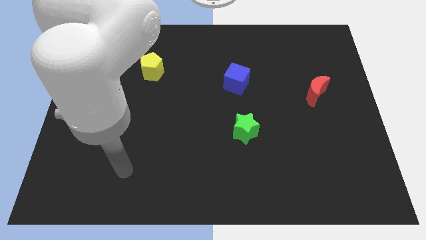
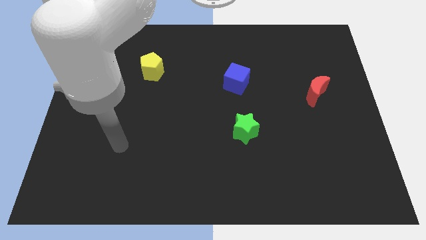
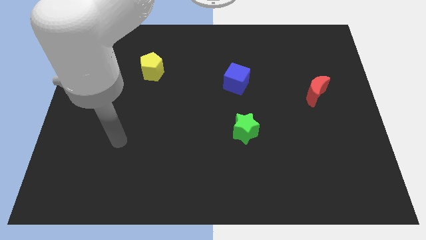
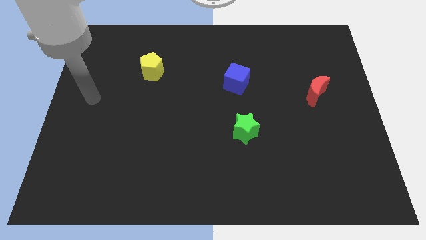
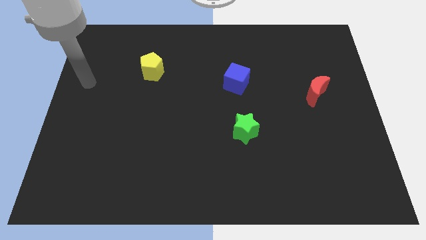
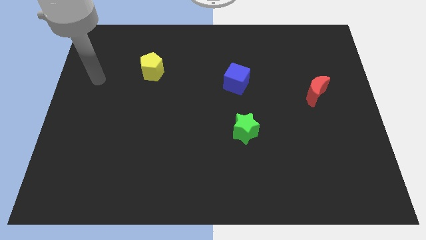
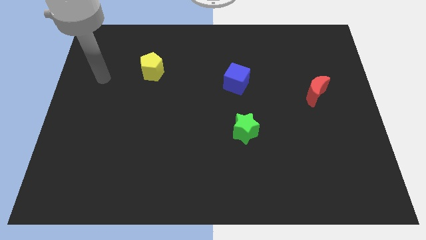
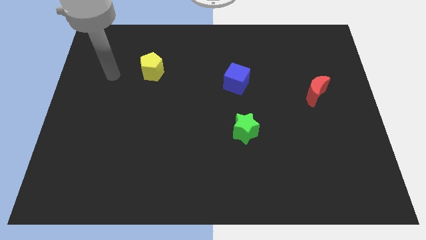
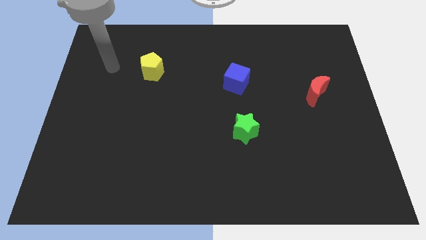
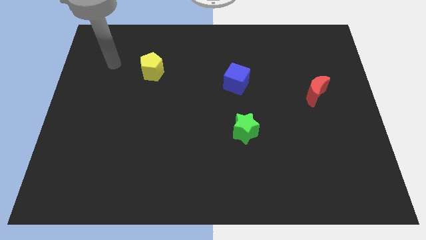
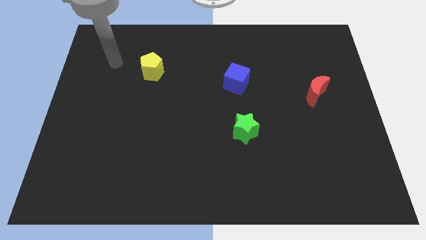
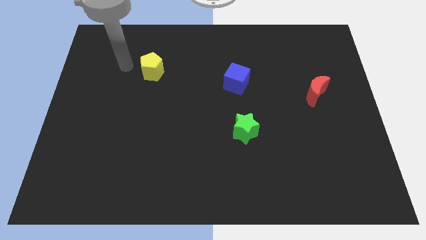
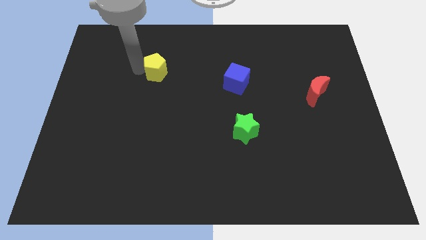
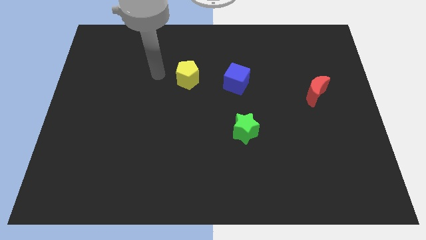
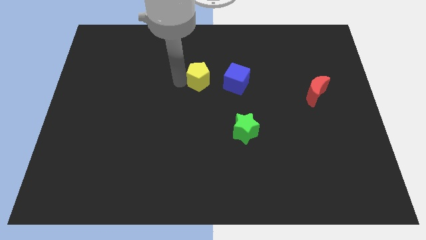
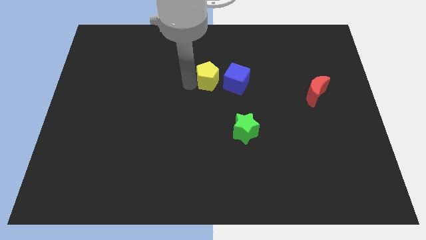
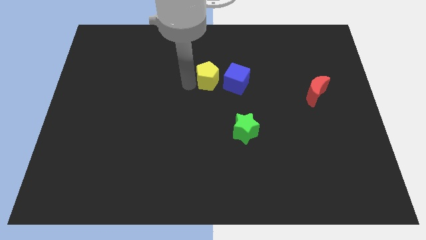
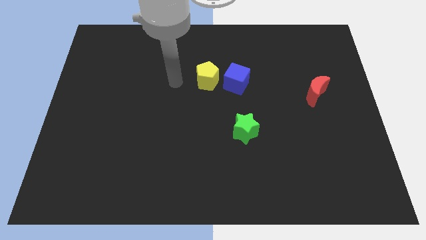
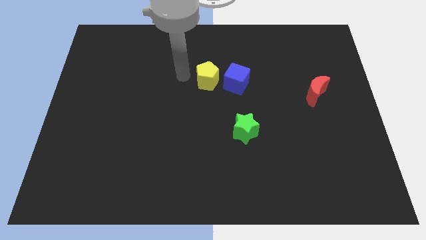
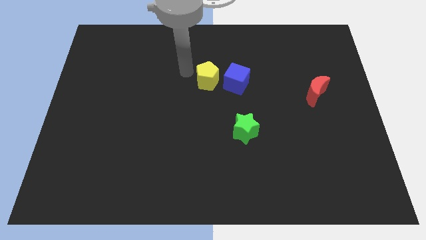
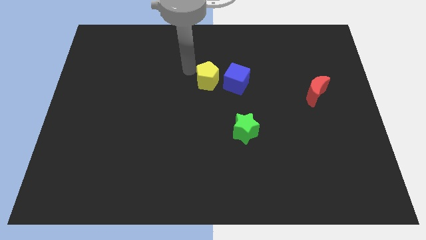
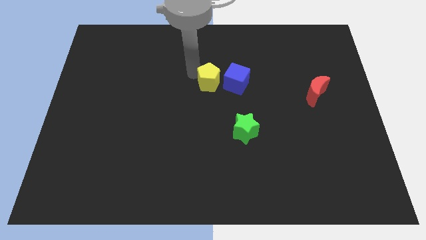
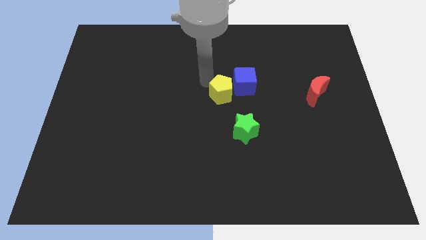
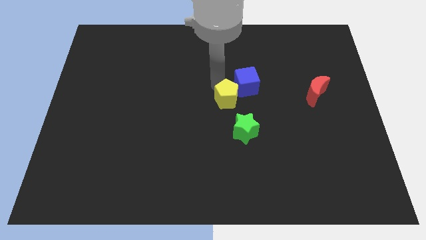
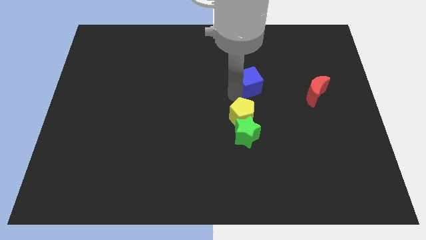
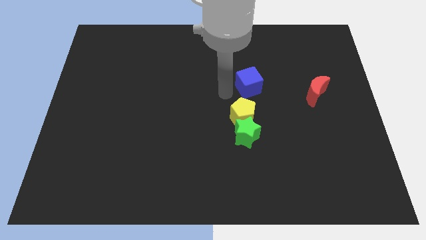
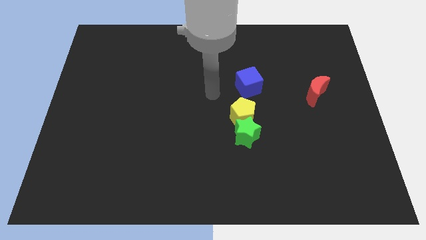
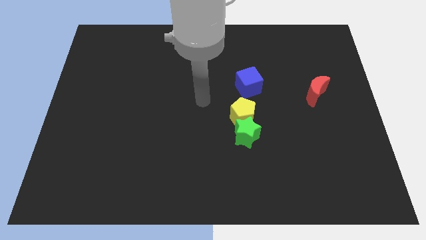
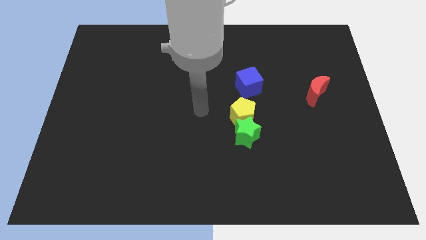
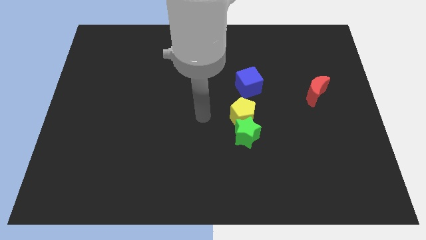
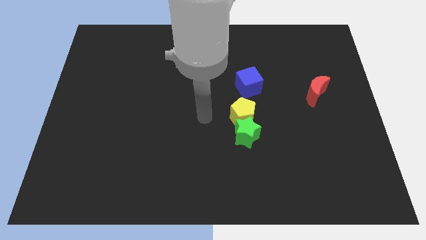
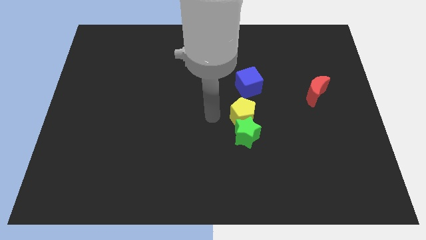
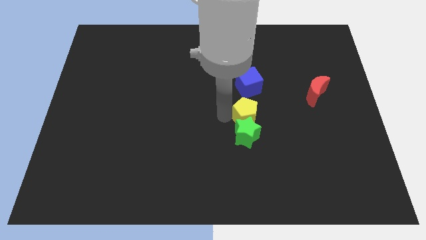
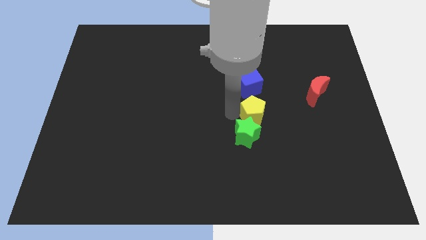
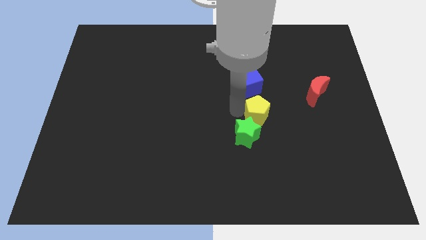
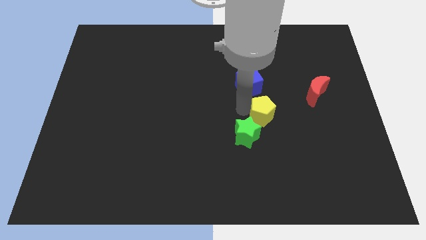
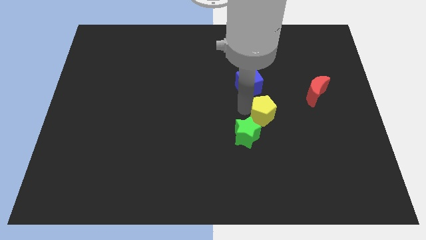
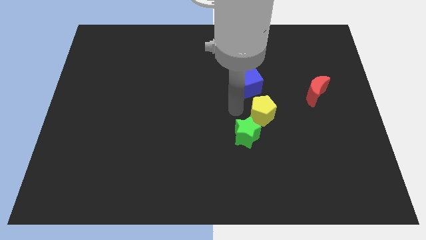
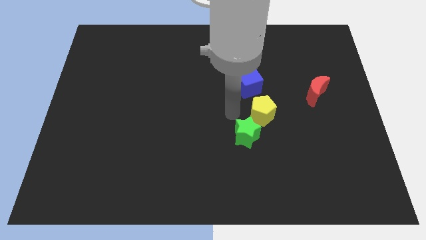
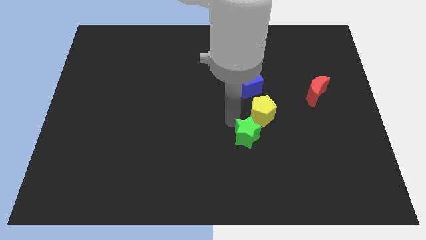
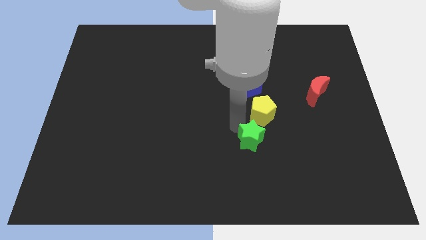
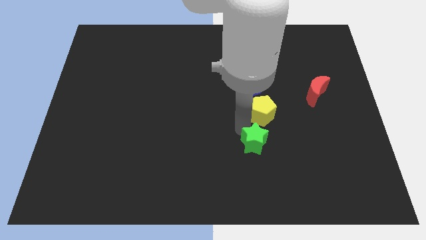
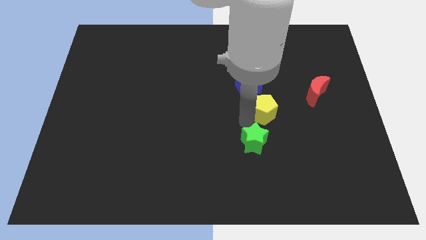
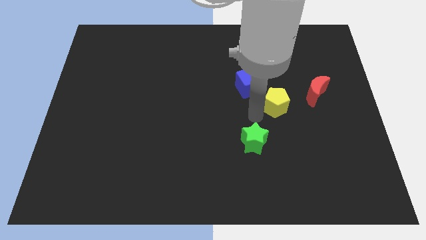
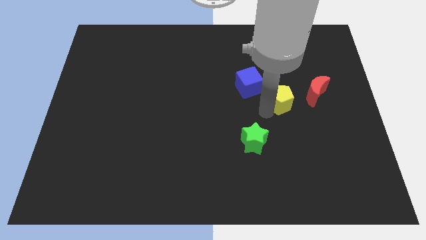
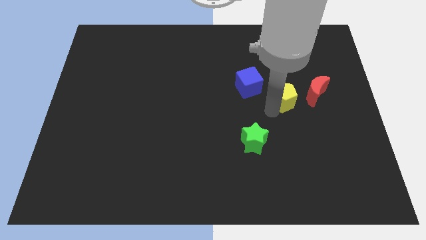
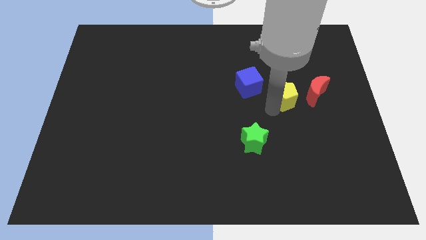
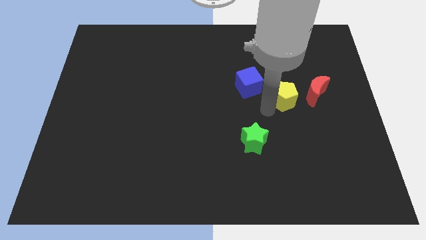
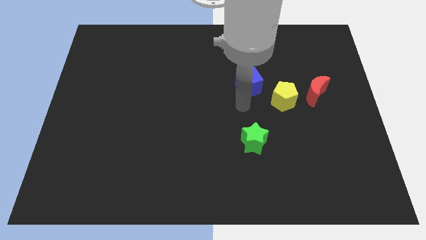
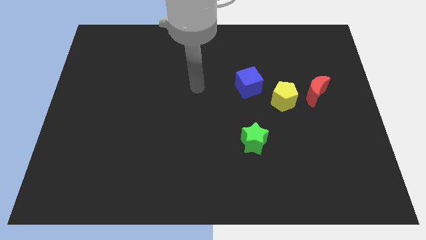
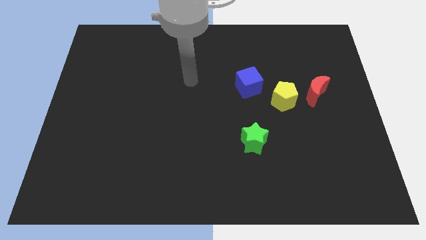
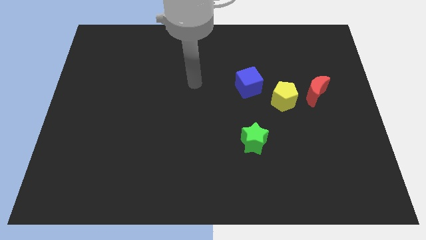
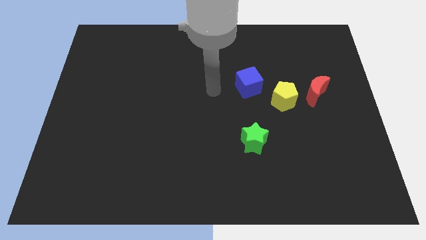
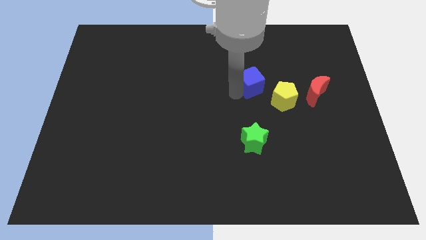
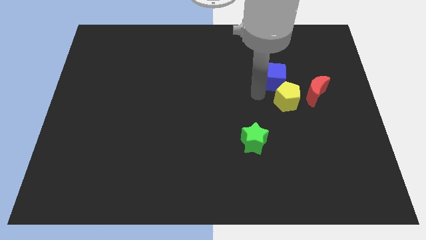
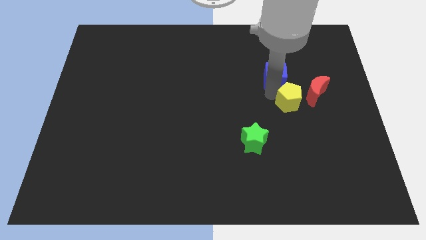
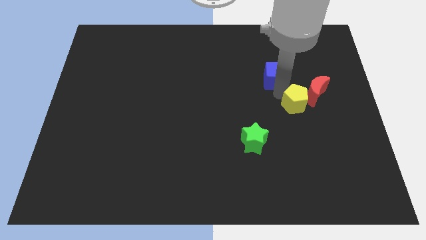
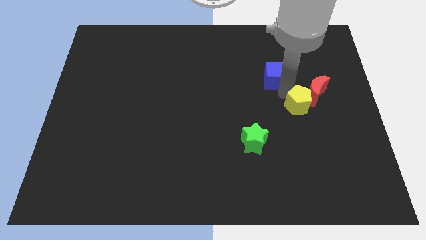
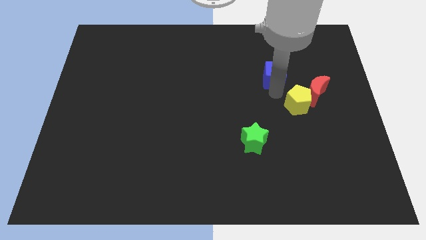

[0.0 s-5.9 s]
push the pentagon close to the red block

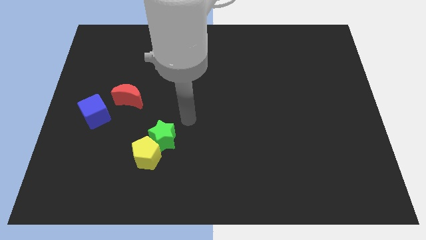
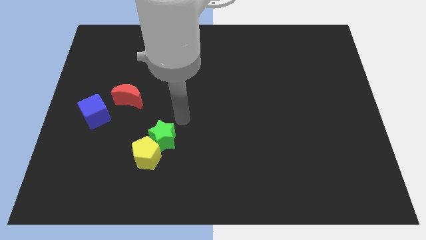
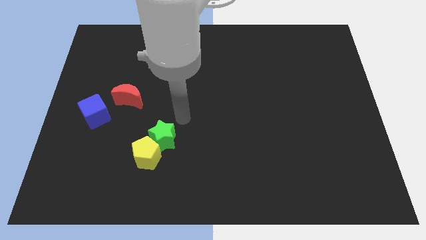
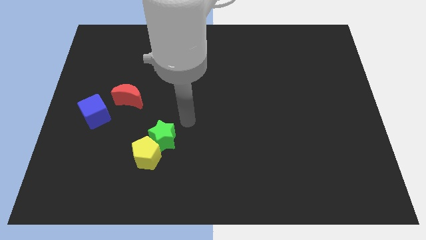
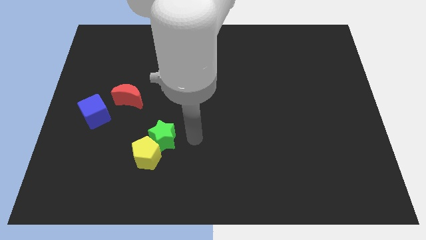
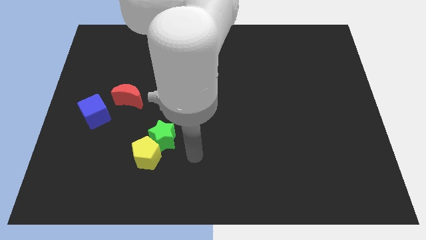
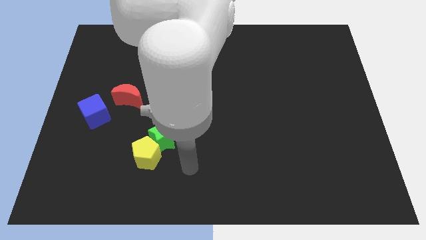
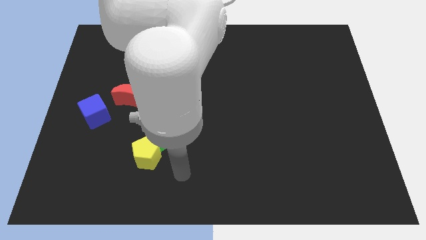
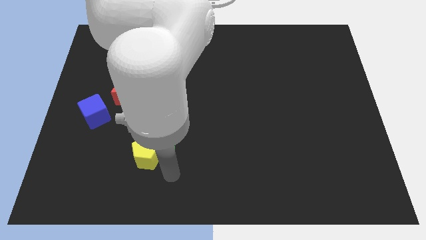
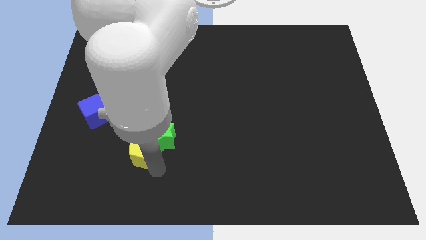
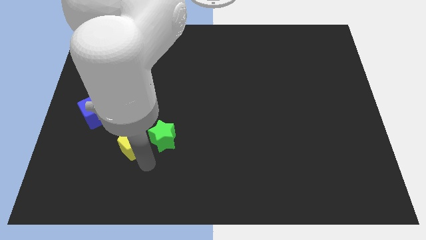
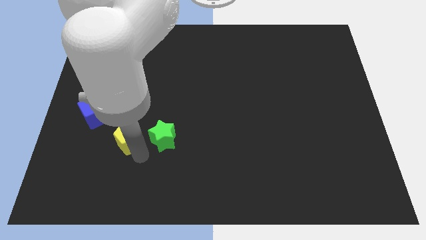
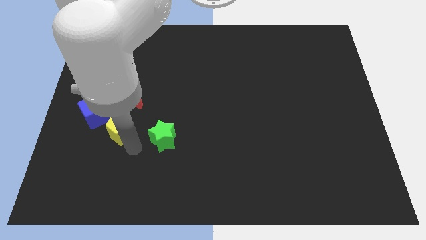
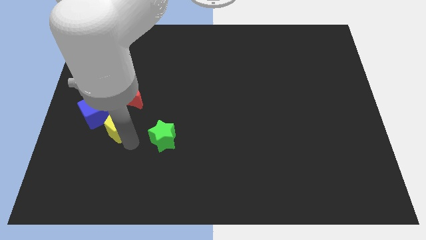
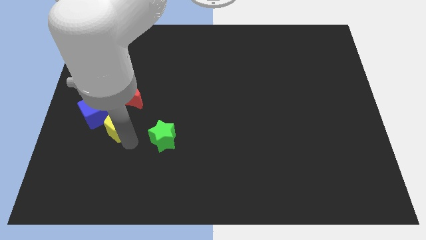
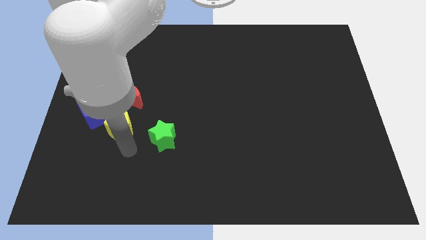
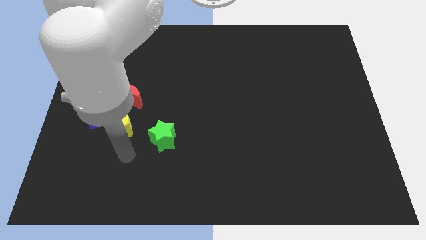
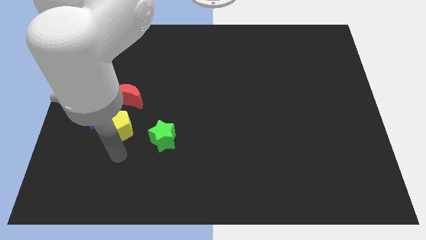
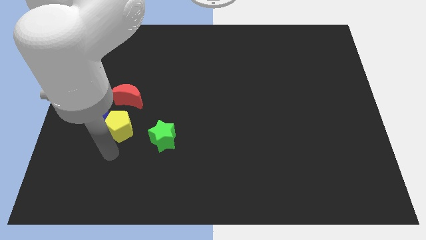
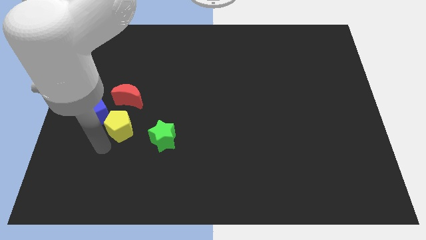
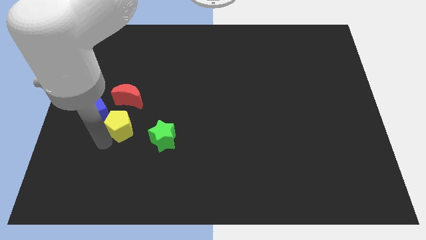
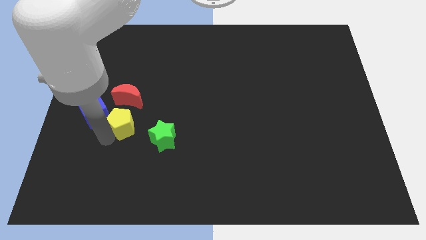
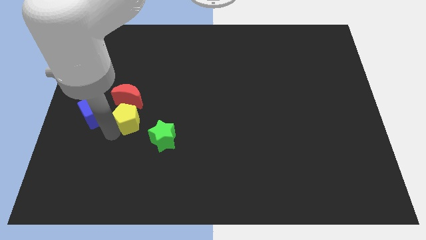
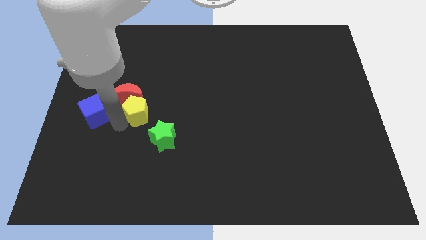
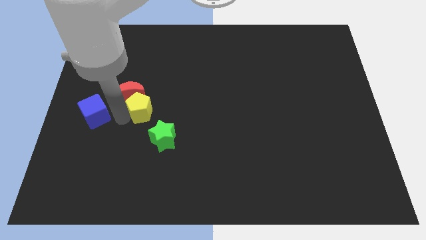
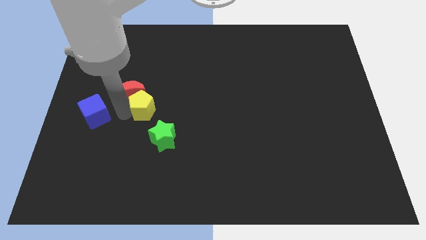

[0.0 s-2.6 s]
put the pentagon to the red block
